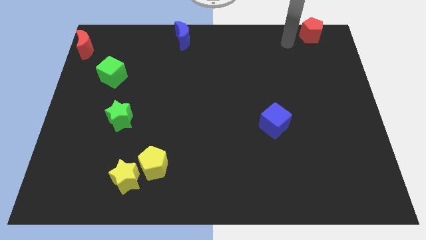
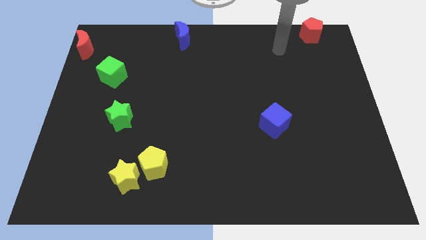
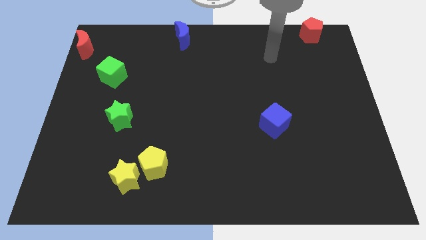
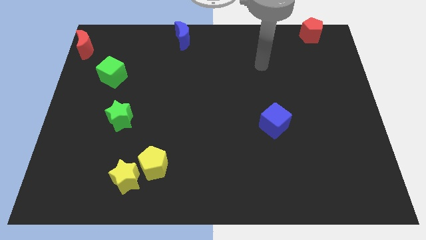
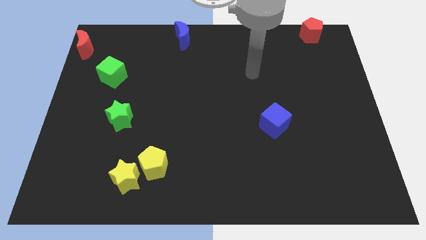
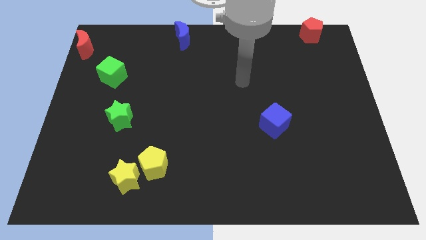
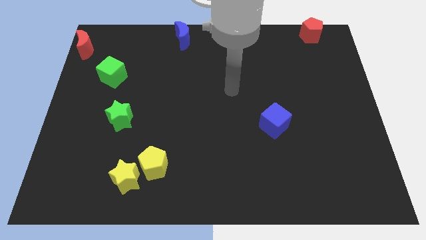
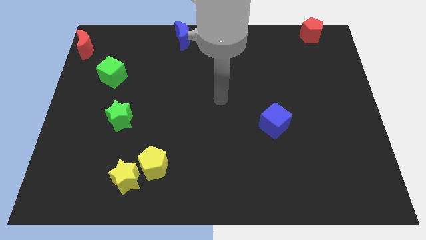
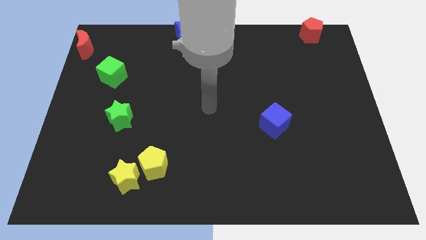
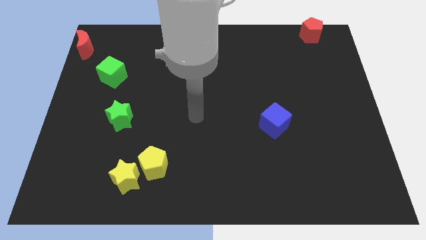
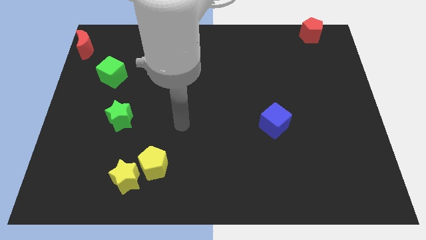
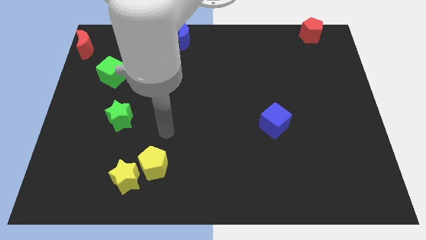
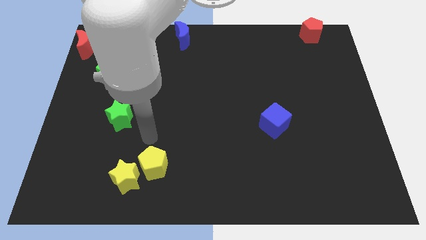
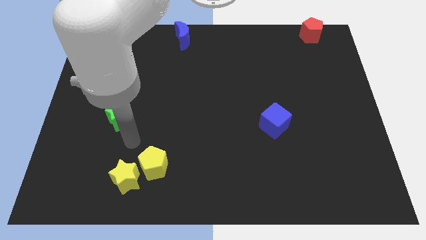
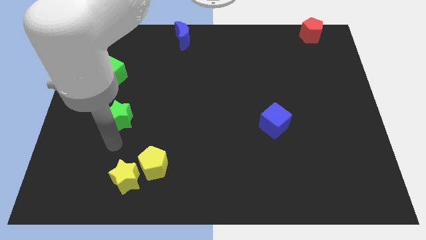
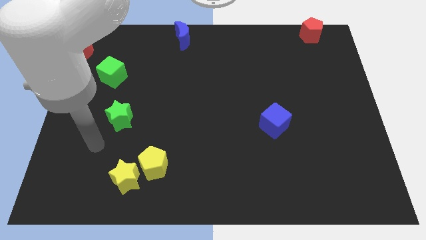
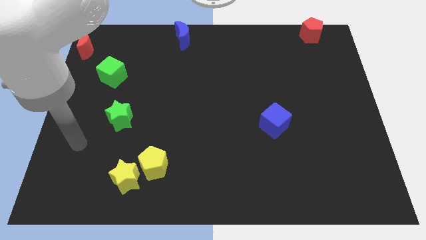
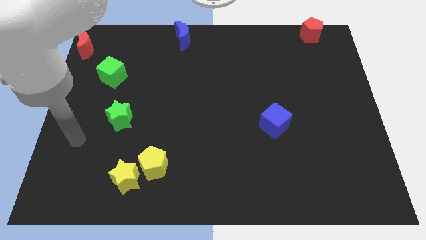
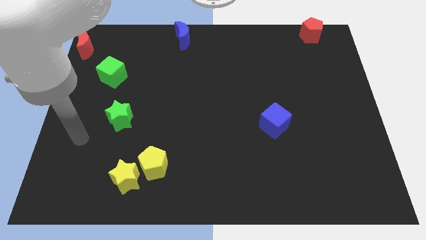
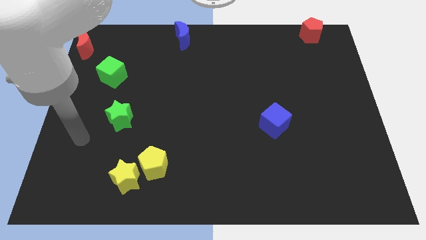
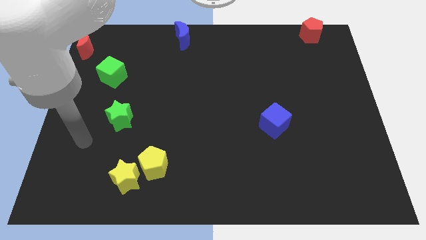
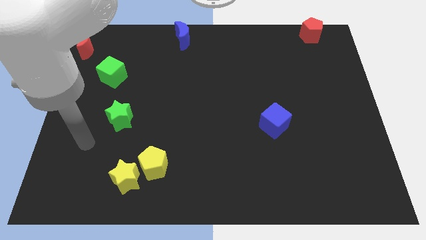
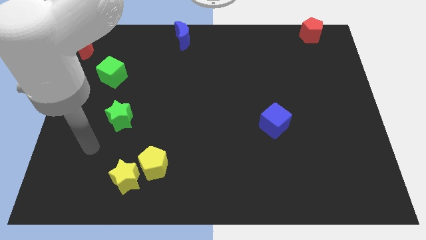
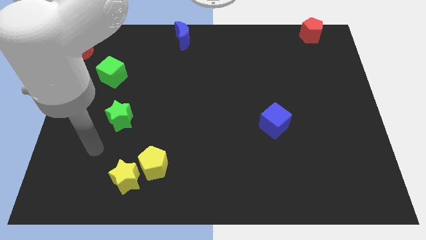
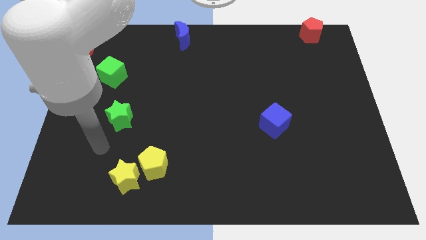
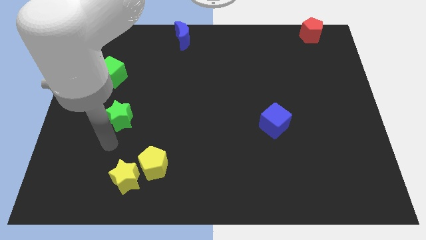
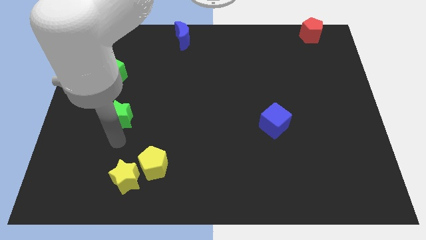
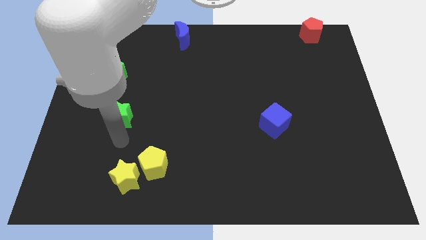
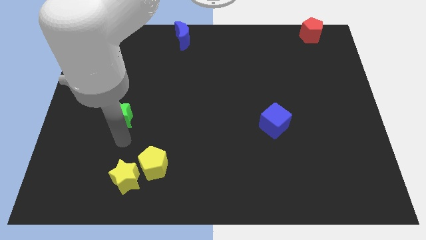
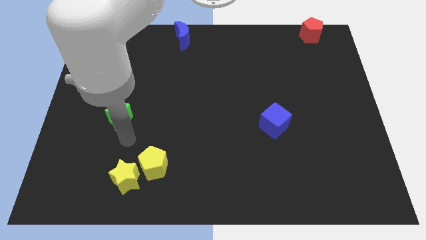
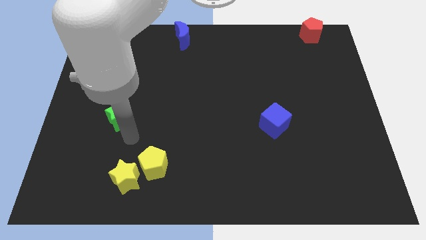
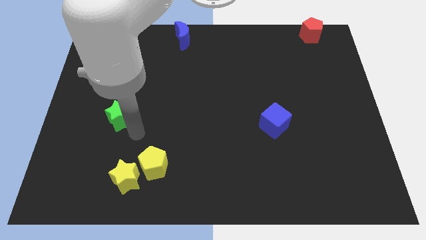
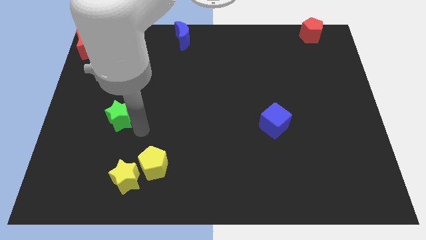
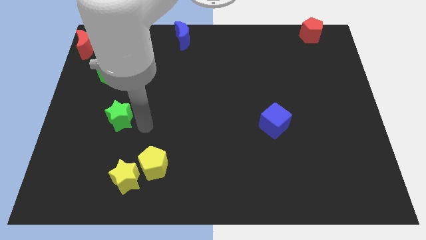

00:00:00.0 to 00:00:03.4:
go away from the red pentagon

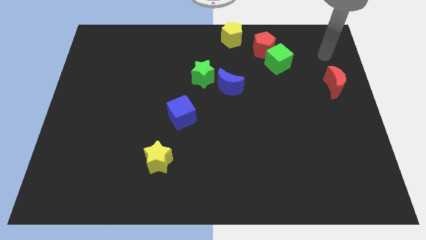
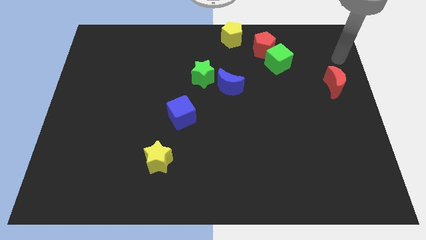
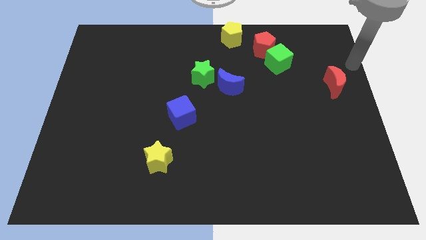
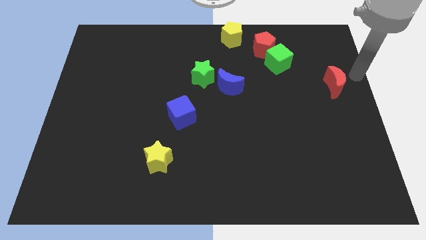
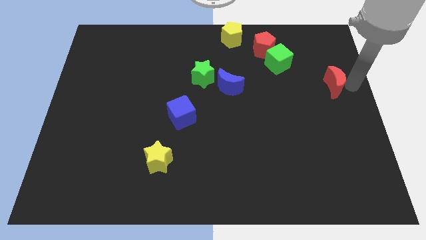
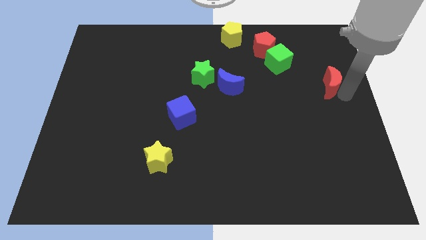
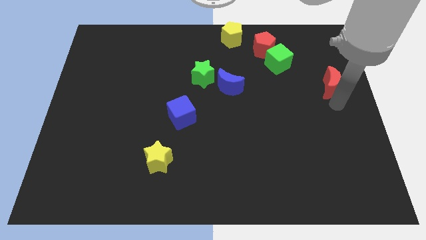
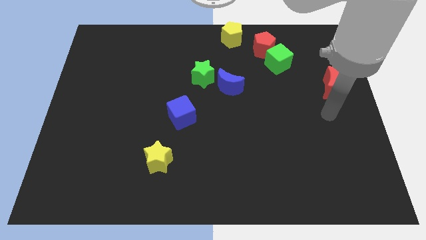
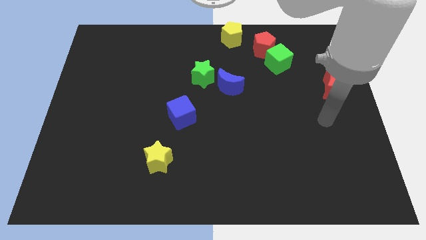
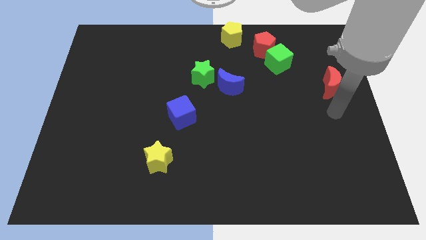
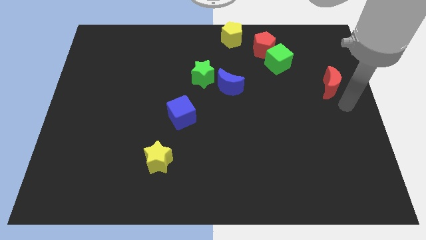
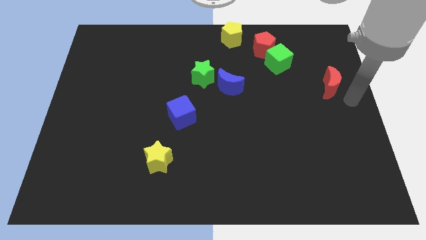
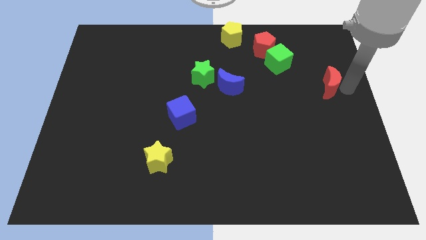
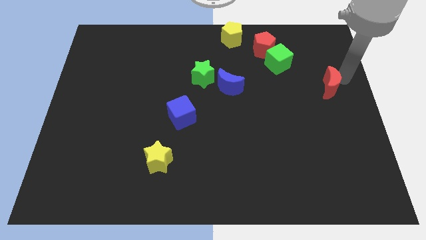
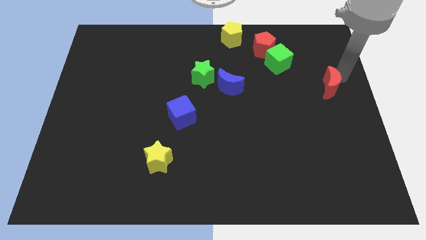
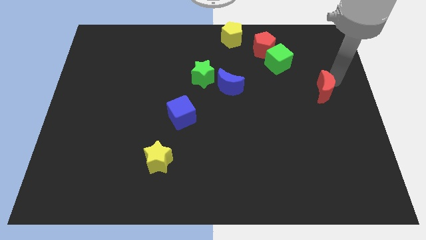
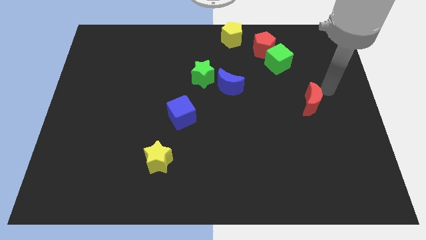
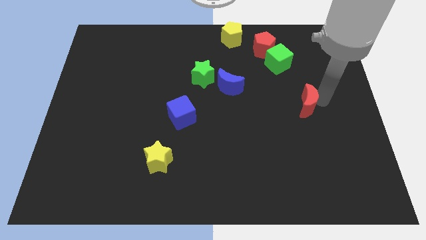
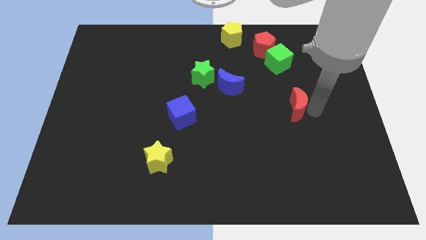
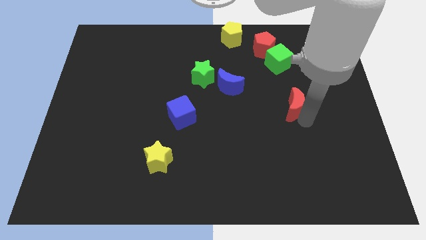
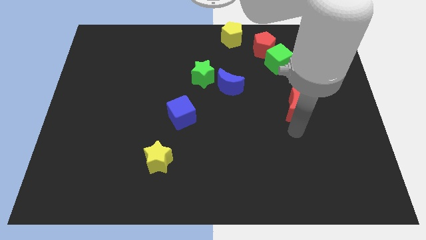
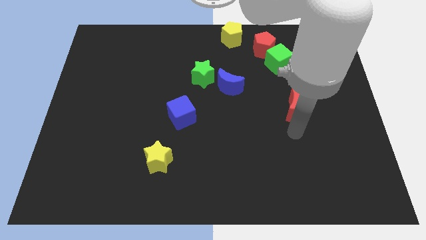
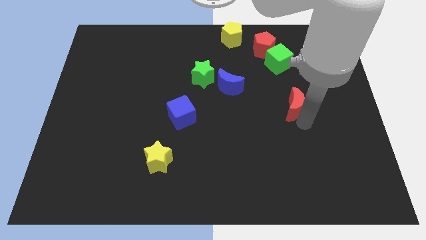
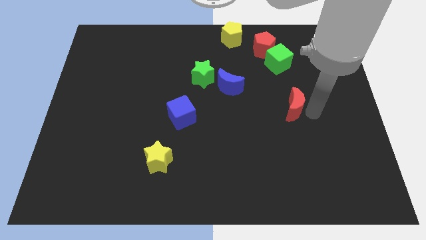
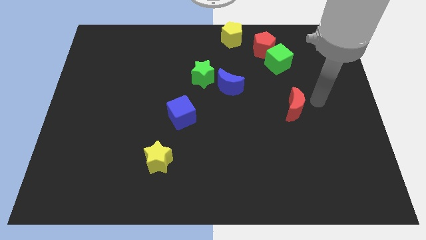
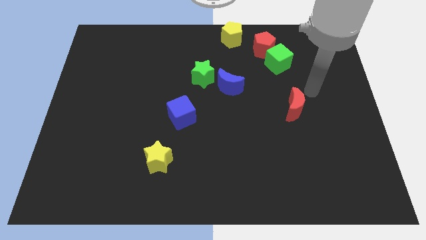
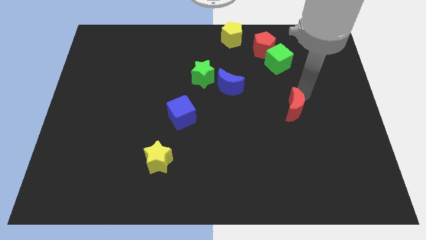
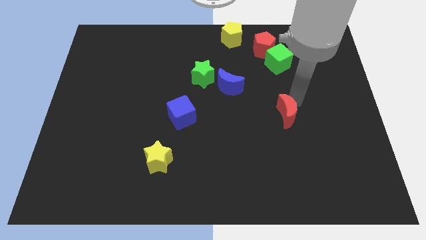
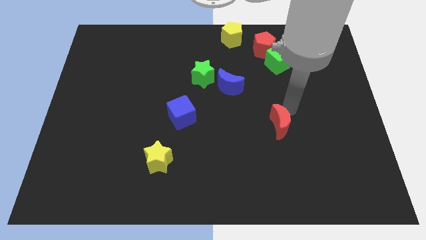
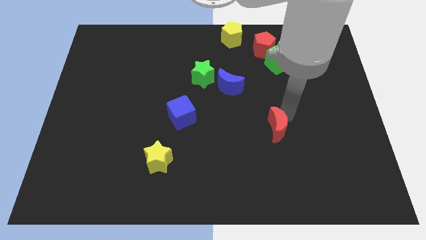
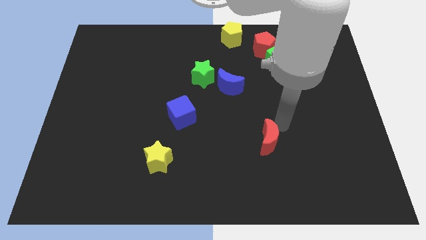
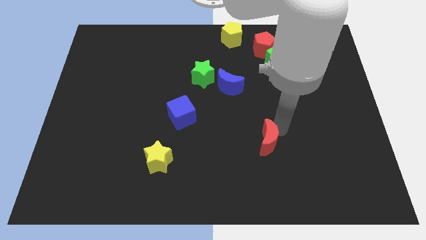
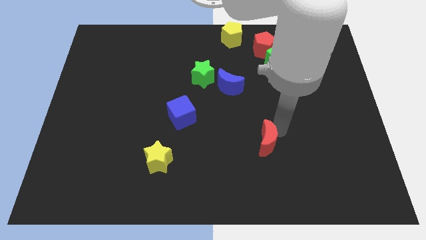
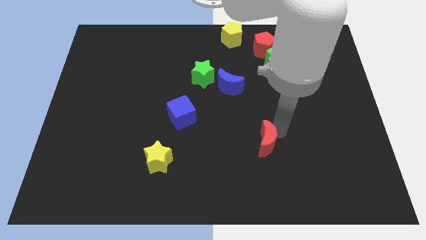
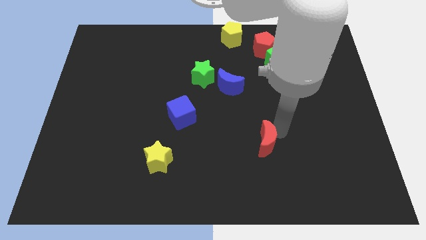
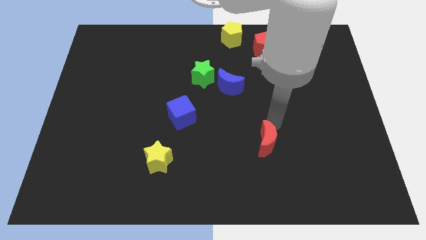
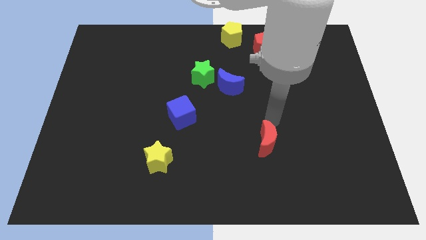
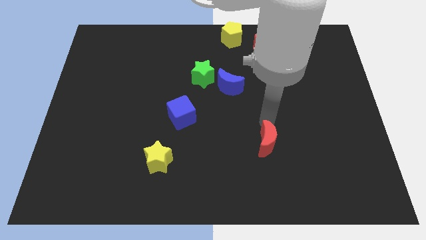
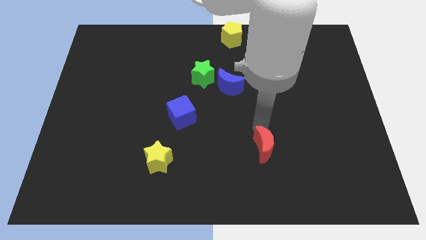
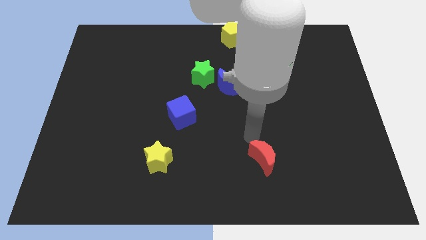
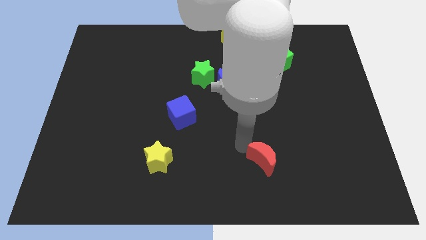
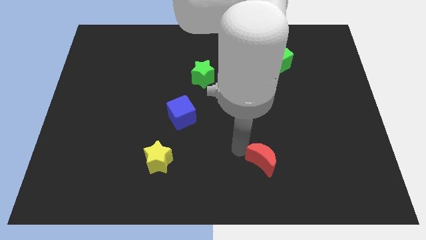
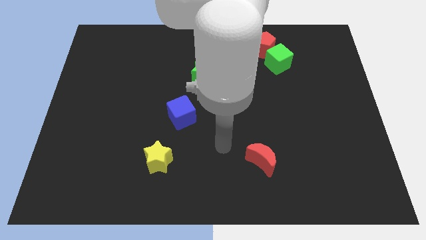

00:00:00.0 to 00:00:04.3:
slide the red moon diagonally bottom right to the blue cube

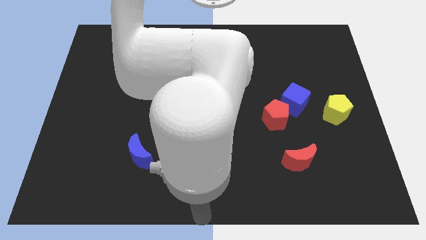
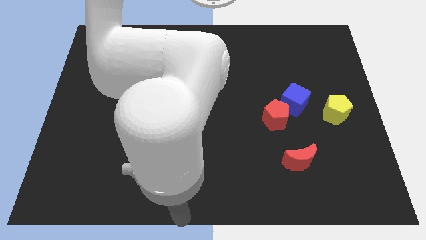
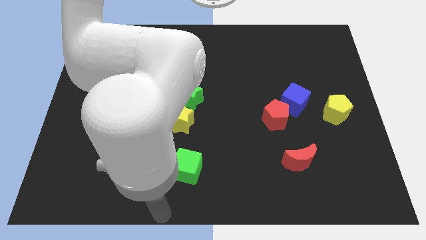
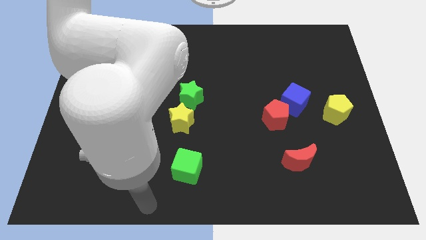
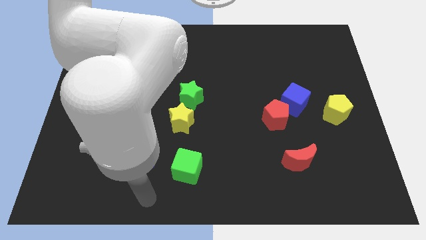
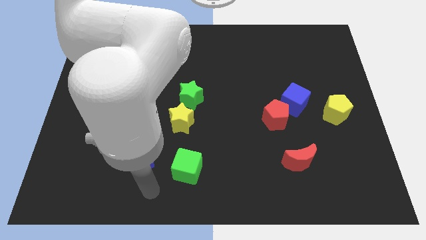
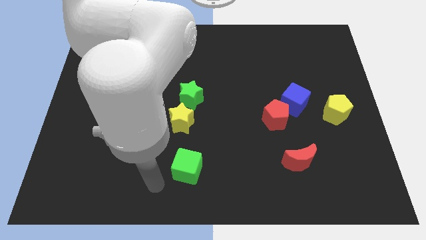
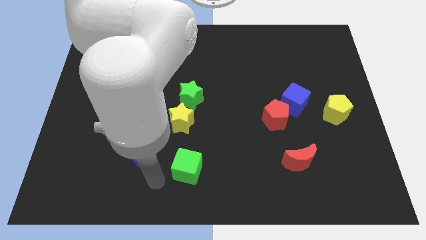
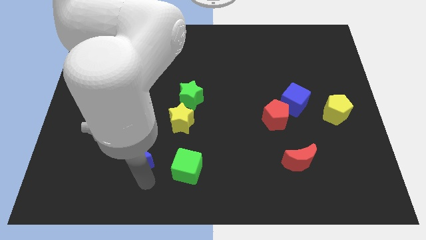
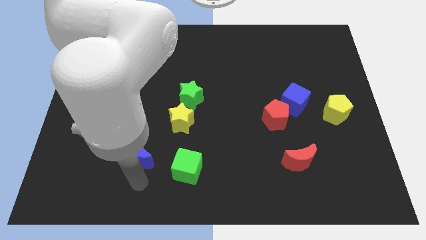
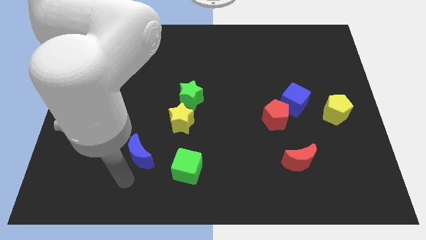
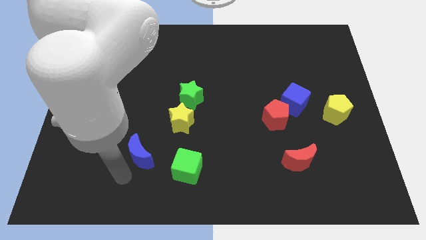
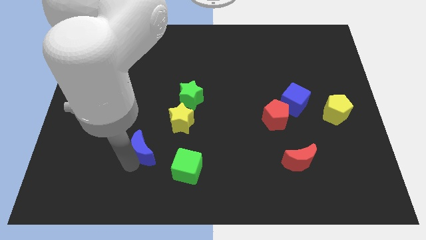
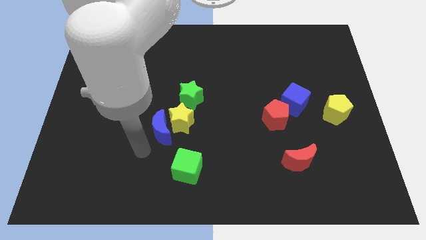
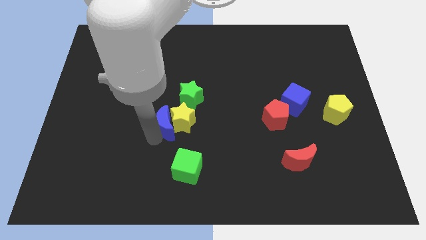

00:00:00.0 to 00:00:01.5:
push the blue crescent to the left of the yellow star
